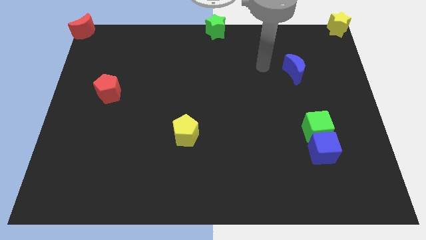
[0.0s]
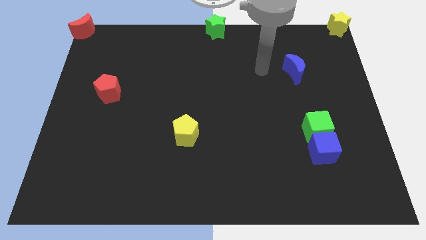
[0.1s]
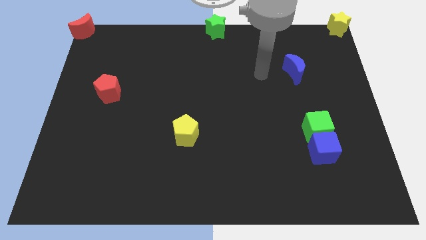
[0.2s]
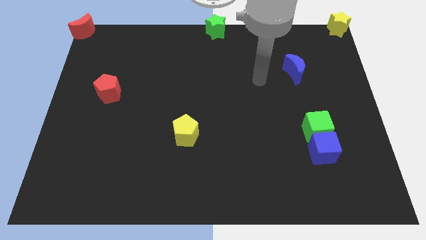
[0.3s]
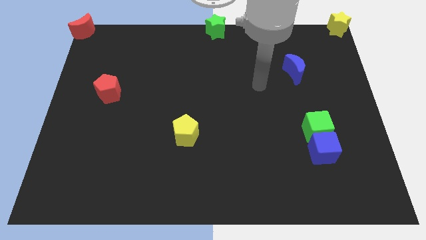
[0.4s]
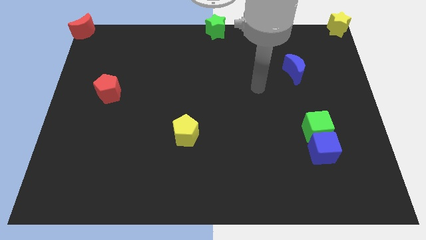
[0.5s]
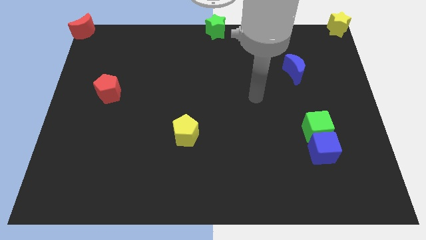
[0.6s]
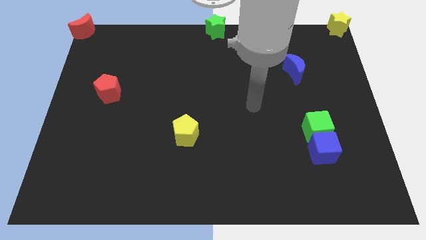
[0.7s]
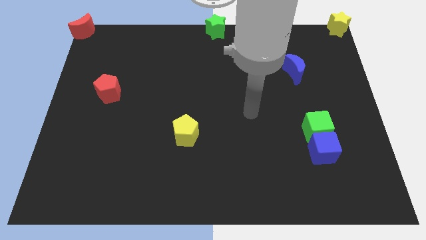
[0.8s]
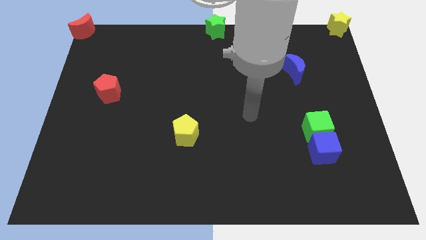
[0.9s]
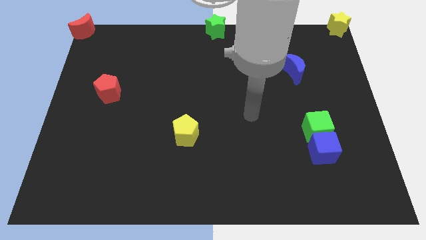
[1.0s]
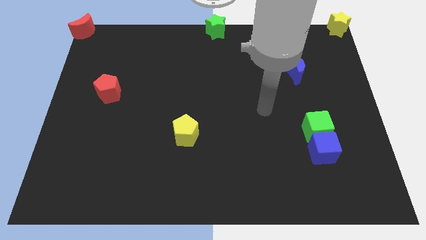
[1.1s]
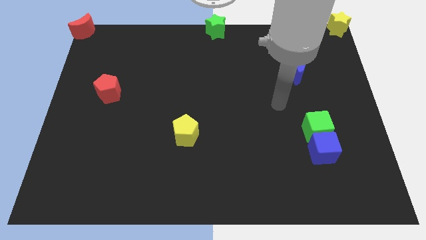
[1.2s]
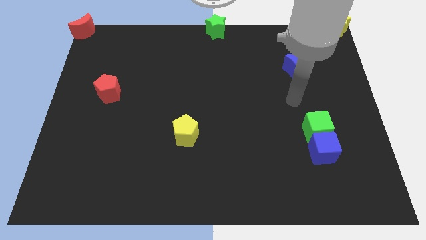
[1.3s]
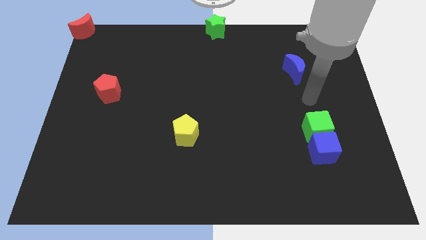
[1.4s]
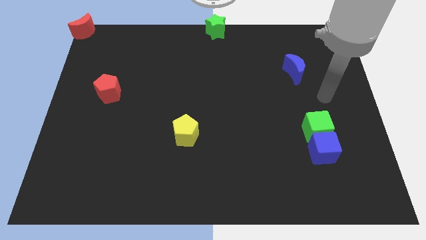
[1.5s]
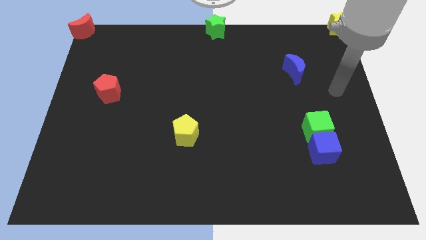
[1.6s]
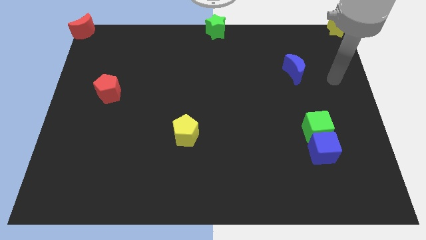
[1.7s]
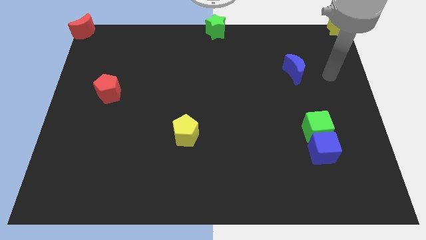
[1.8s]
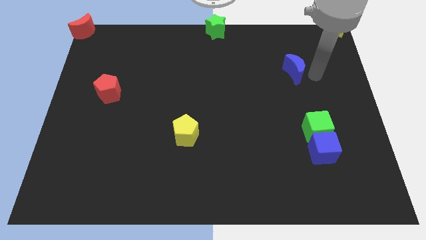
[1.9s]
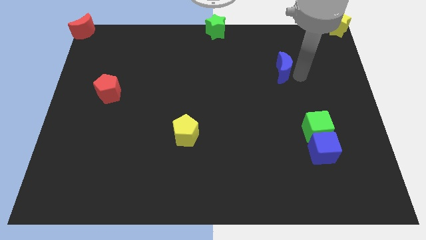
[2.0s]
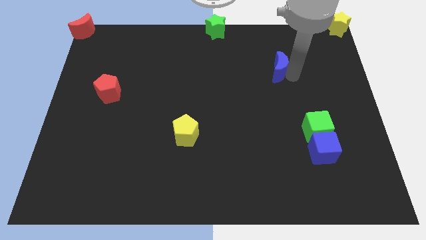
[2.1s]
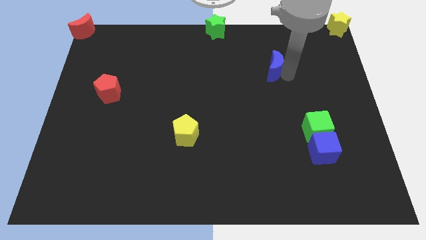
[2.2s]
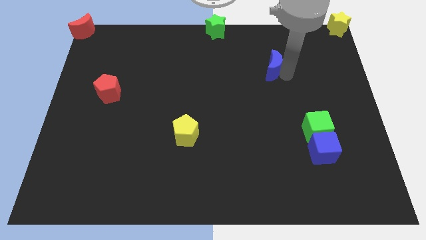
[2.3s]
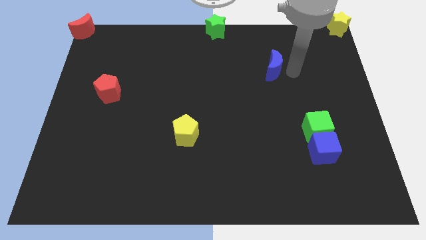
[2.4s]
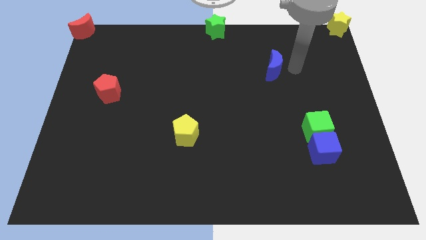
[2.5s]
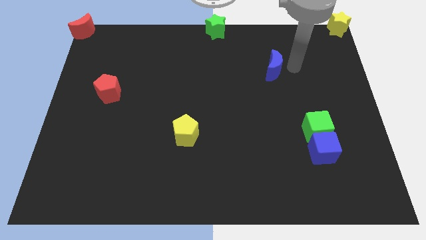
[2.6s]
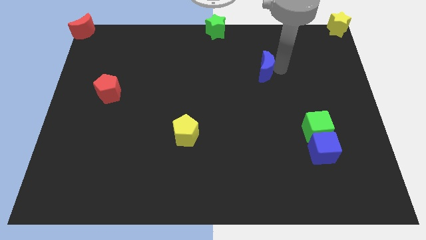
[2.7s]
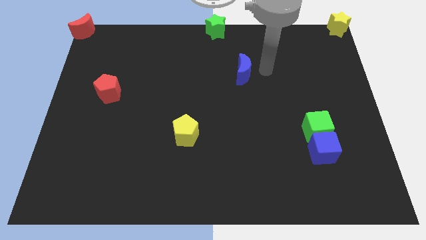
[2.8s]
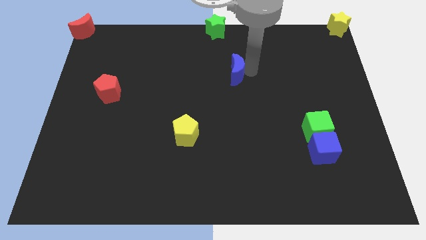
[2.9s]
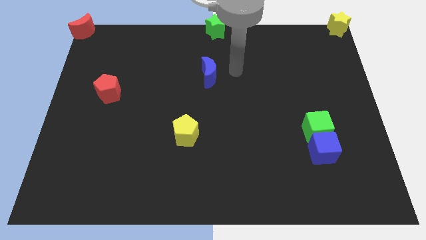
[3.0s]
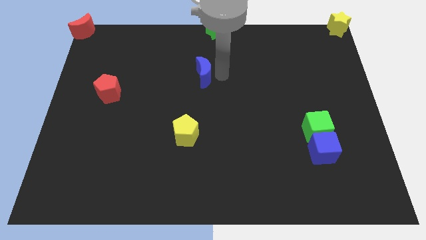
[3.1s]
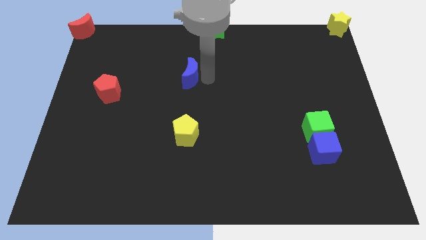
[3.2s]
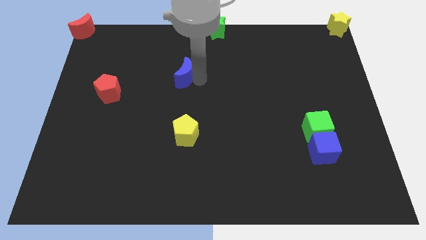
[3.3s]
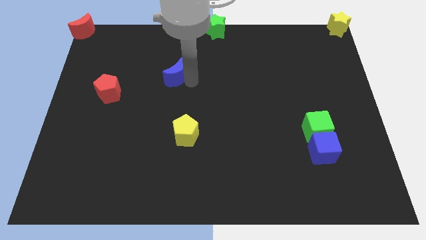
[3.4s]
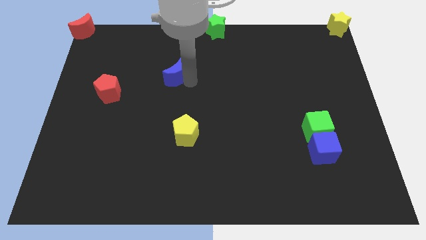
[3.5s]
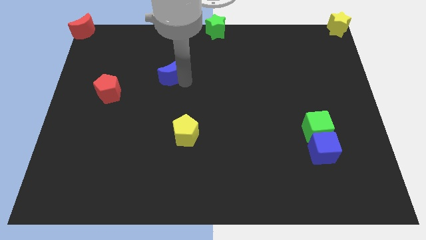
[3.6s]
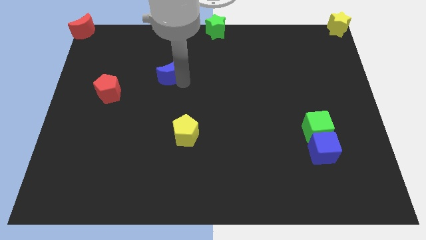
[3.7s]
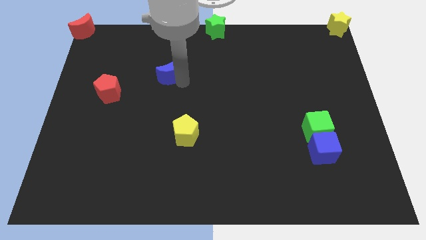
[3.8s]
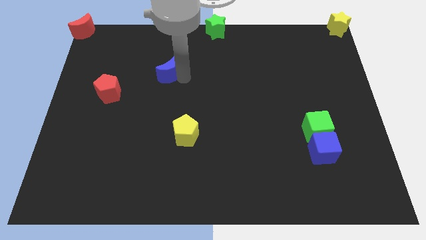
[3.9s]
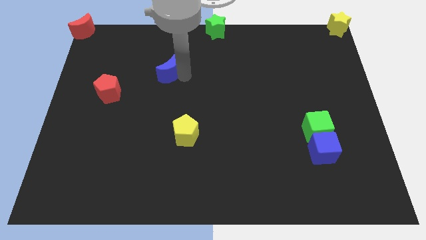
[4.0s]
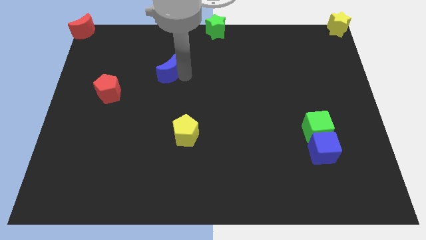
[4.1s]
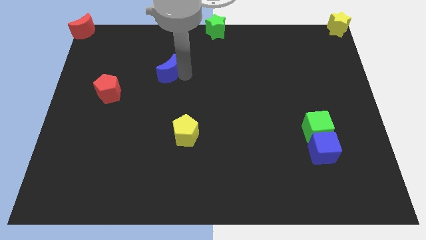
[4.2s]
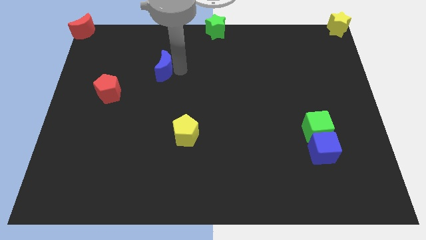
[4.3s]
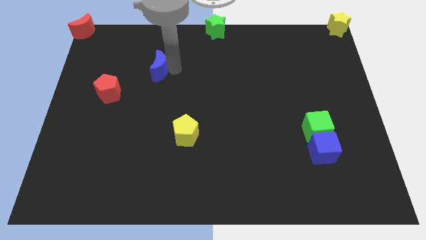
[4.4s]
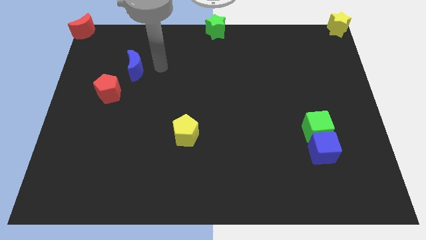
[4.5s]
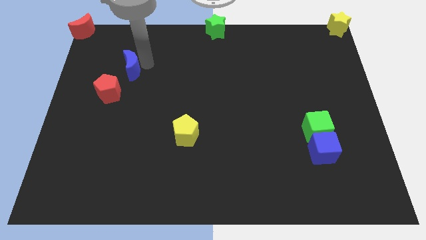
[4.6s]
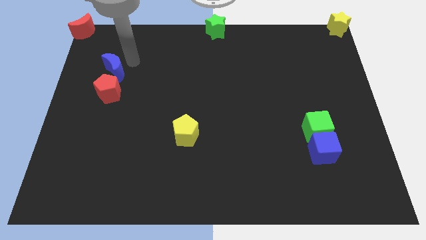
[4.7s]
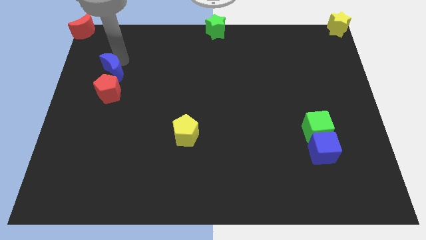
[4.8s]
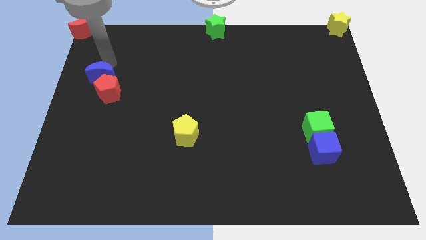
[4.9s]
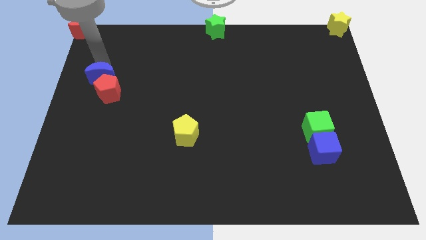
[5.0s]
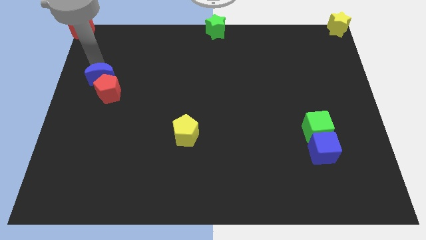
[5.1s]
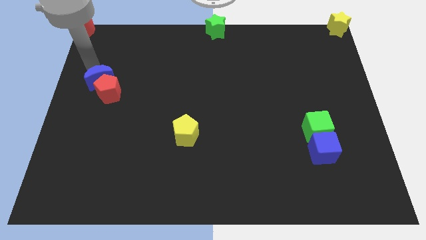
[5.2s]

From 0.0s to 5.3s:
move the blue crescent to the top side of the red pentagon

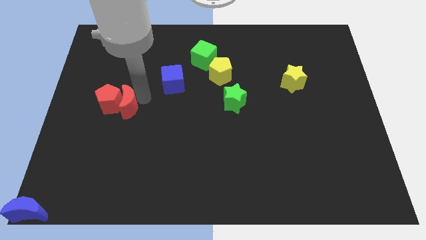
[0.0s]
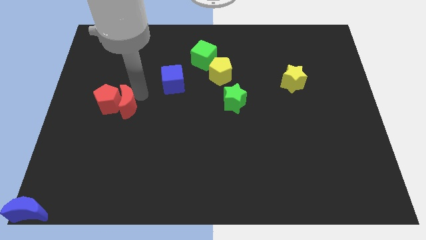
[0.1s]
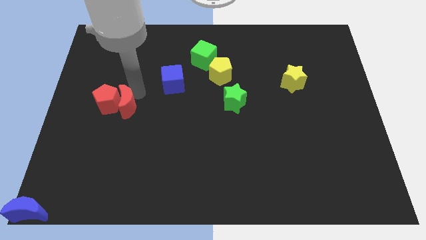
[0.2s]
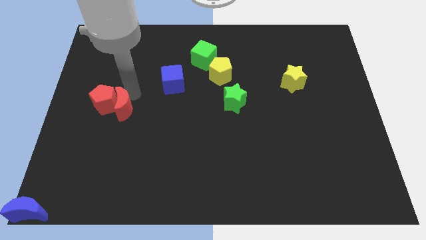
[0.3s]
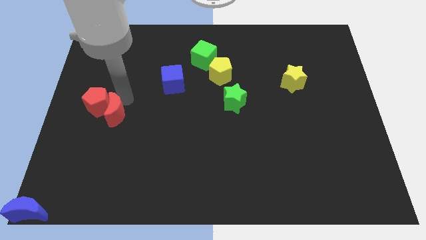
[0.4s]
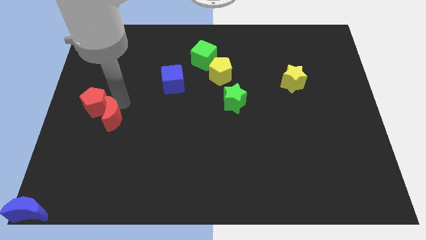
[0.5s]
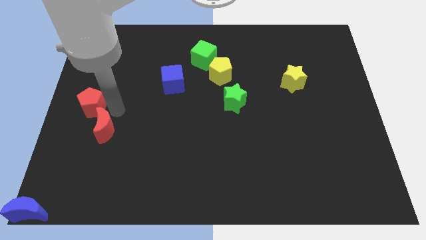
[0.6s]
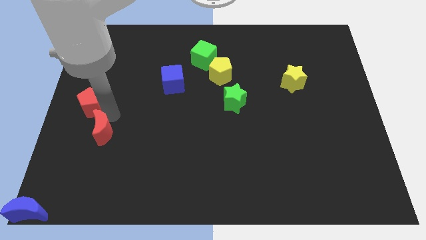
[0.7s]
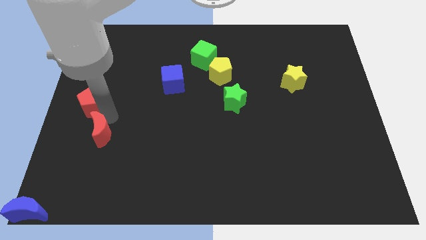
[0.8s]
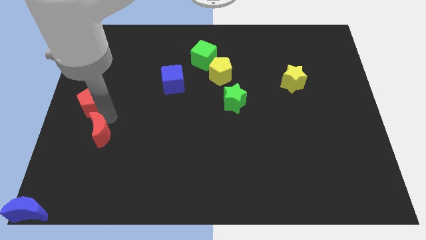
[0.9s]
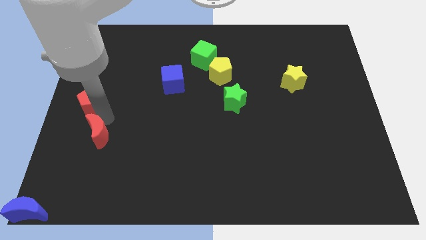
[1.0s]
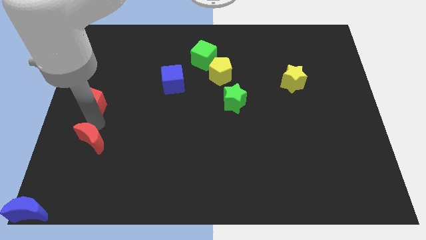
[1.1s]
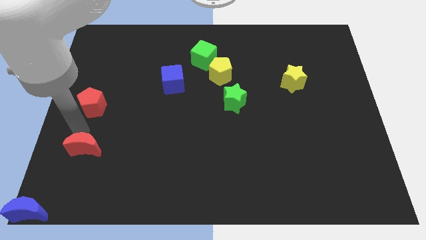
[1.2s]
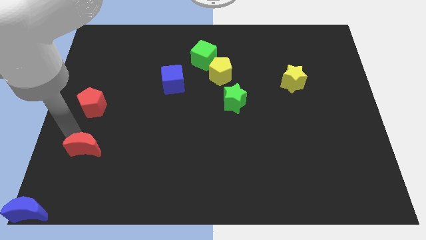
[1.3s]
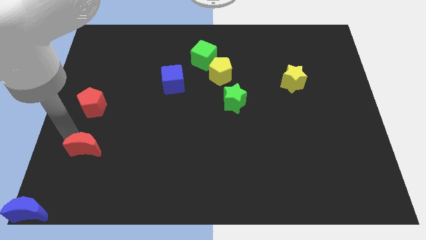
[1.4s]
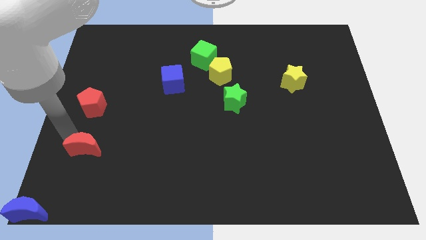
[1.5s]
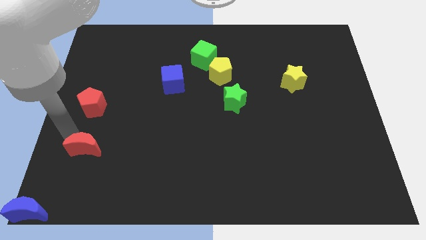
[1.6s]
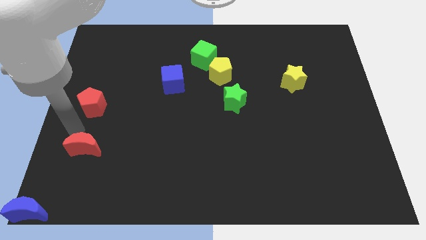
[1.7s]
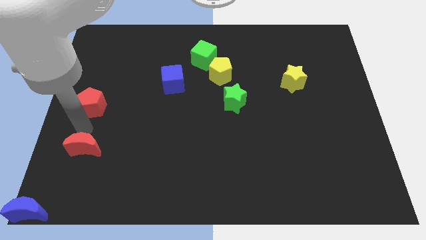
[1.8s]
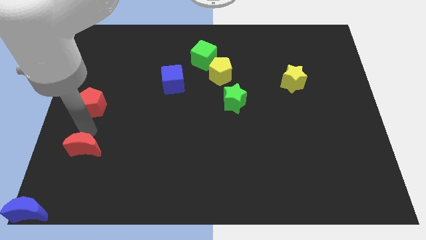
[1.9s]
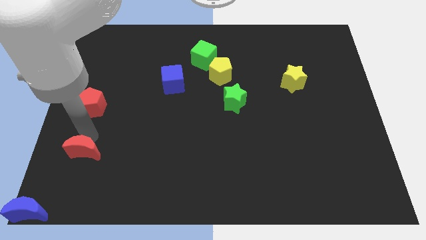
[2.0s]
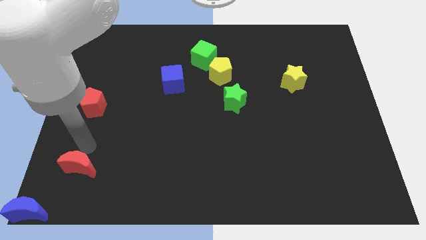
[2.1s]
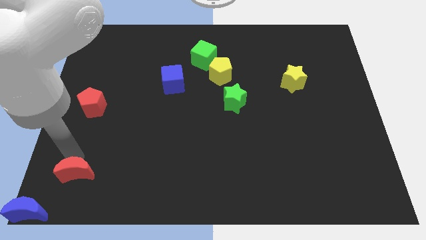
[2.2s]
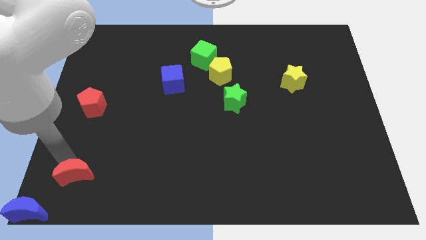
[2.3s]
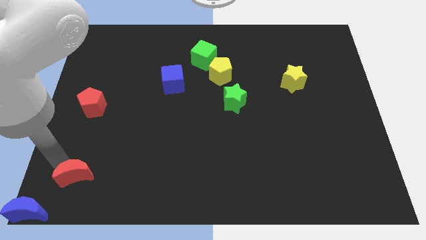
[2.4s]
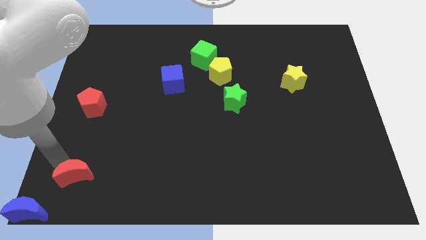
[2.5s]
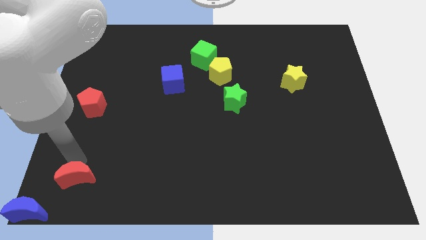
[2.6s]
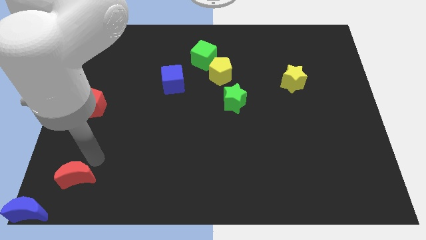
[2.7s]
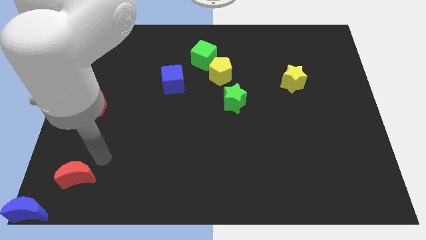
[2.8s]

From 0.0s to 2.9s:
separate the re pentagon and red moon

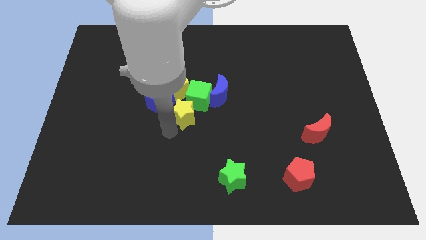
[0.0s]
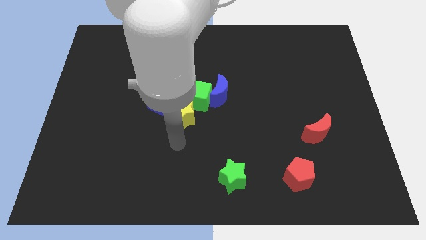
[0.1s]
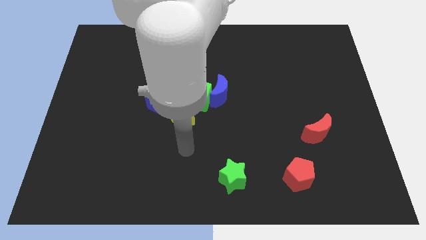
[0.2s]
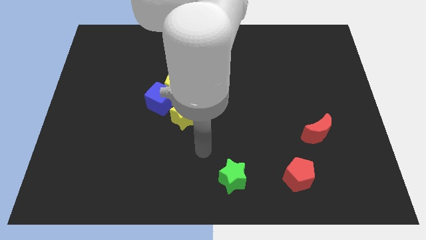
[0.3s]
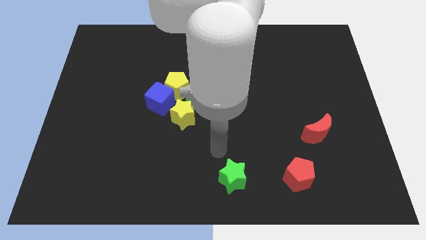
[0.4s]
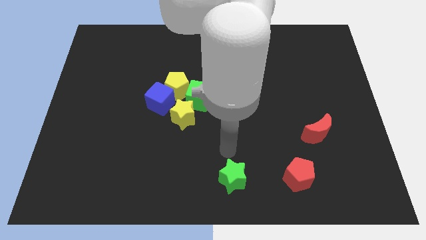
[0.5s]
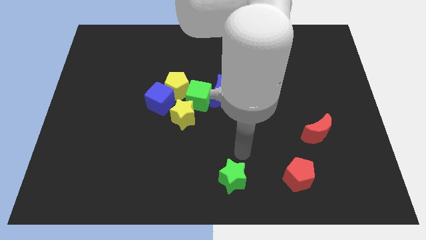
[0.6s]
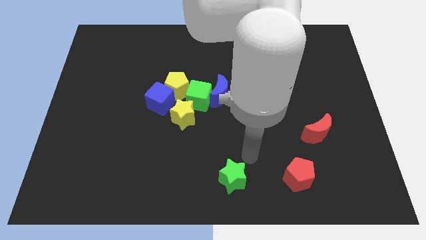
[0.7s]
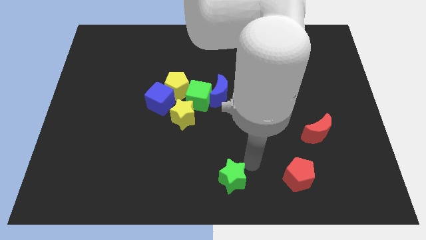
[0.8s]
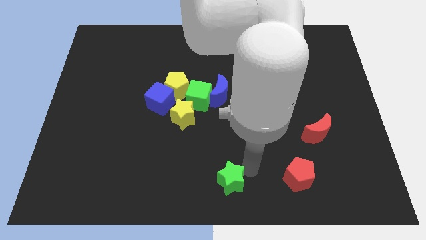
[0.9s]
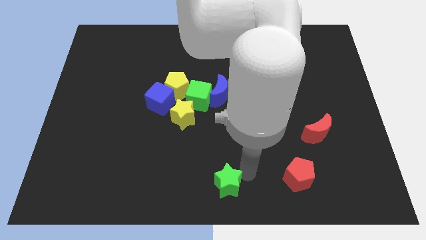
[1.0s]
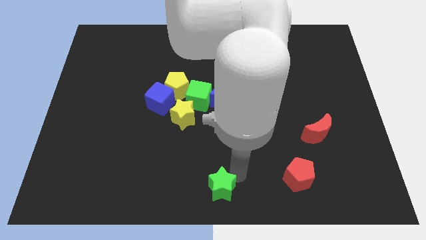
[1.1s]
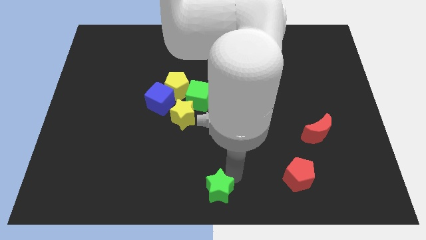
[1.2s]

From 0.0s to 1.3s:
push the green star to the bottom center of the board
